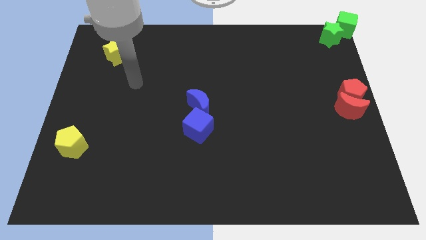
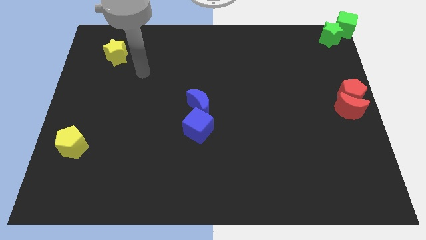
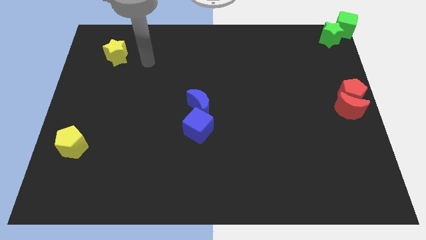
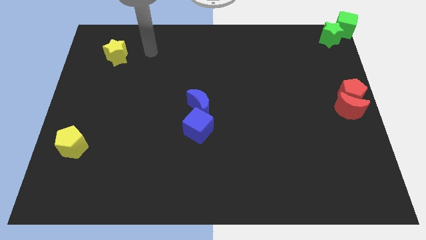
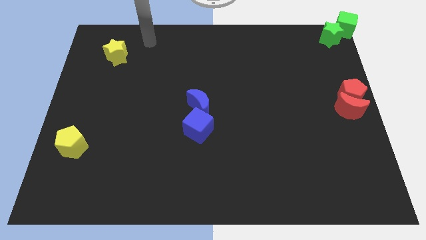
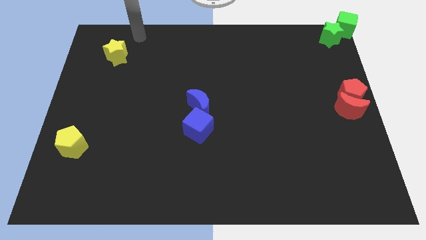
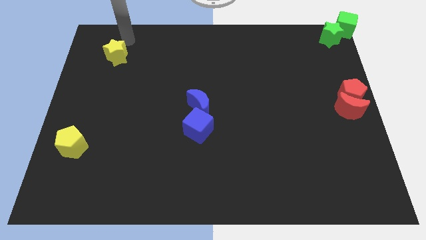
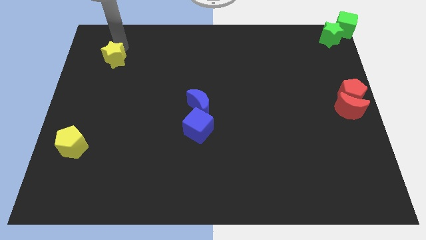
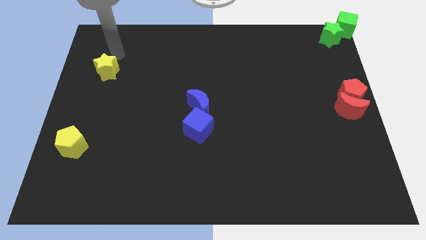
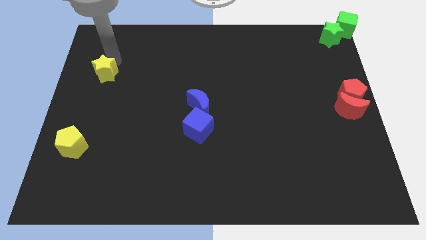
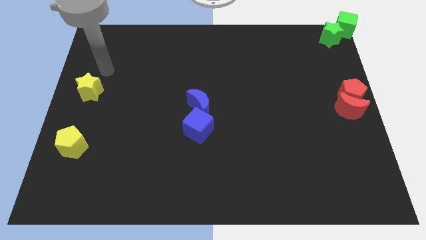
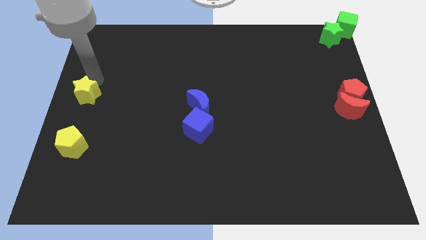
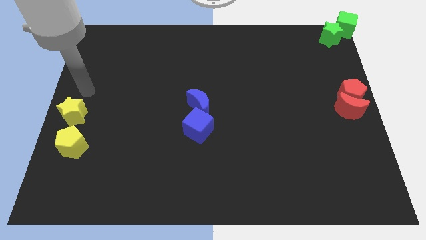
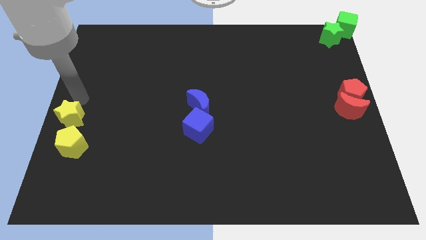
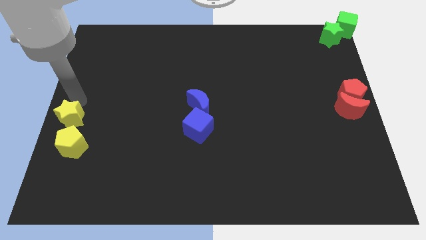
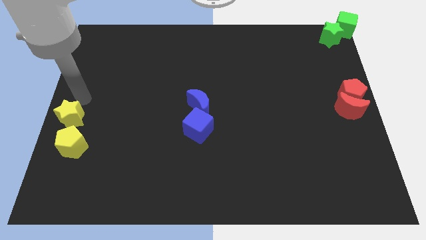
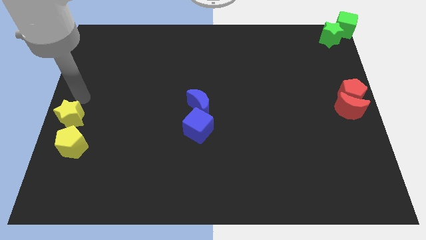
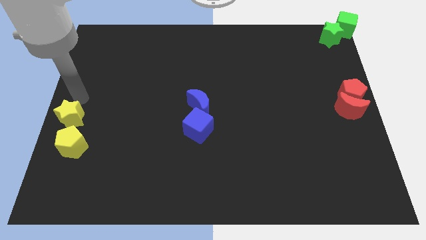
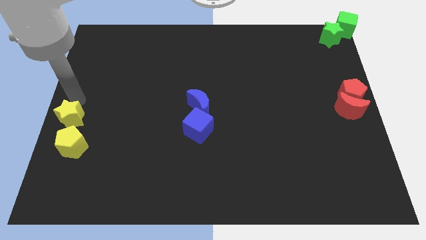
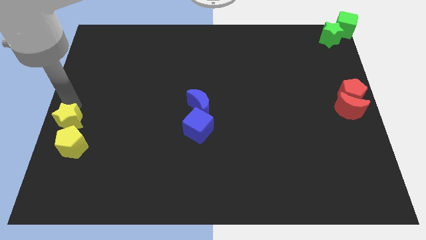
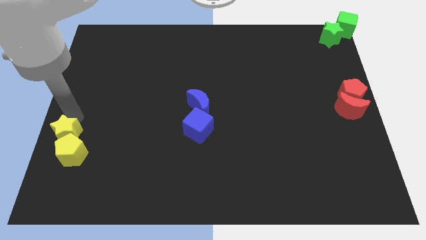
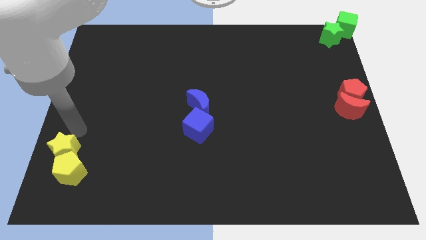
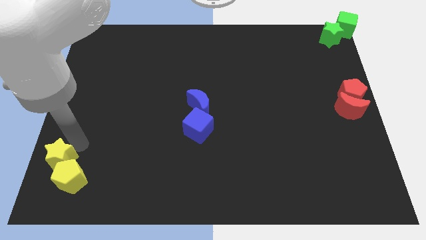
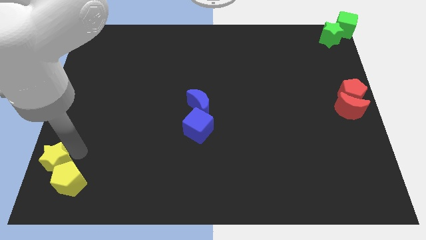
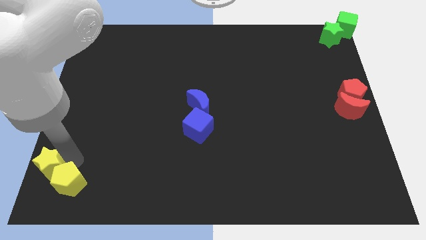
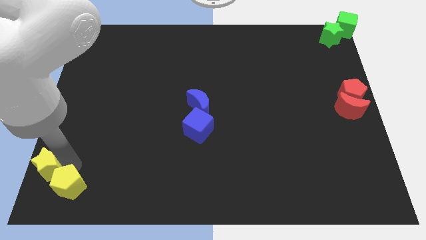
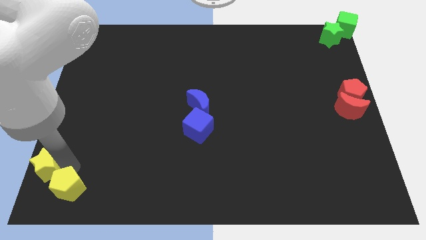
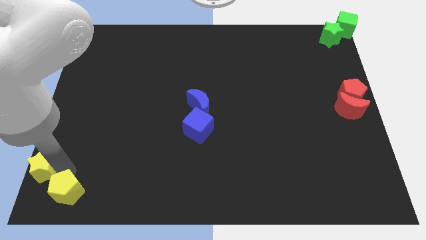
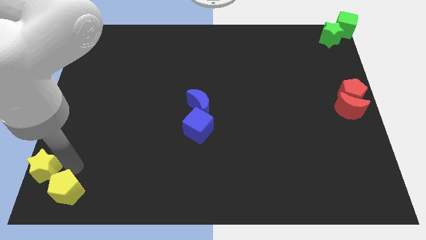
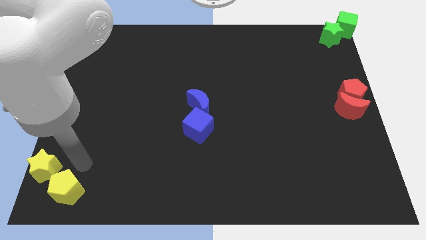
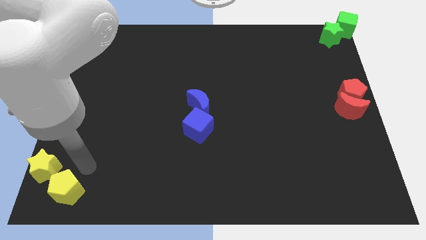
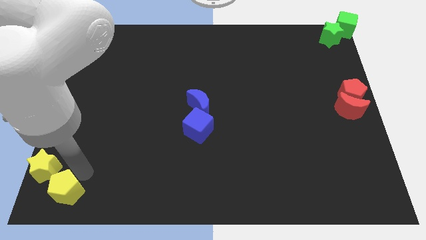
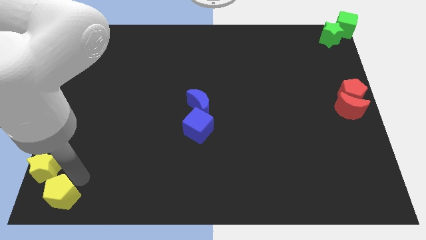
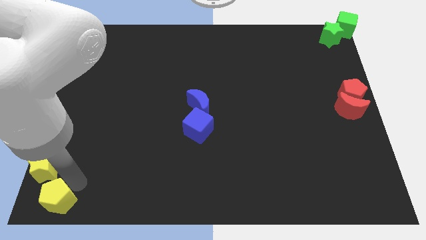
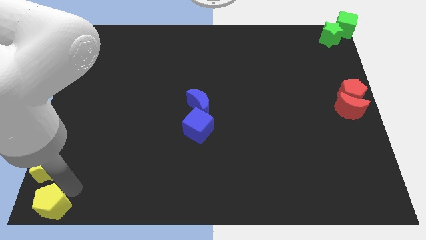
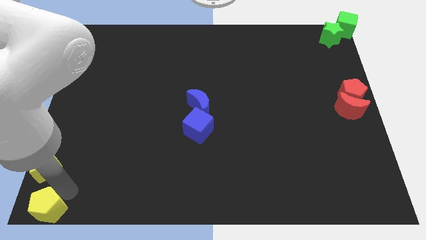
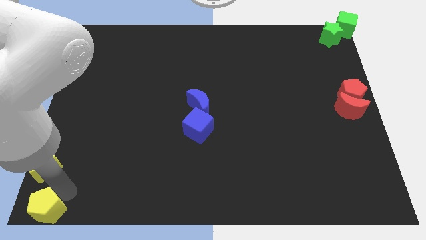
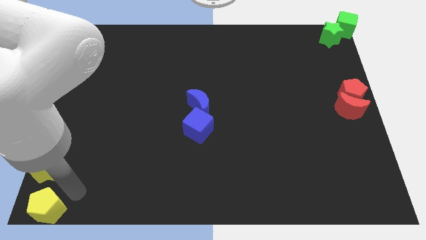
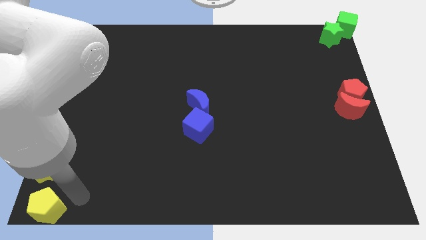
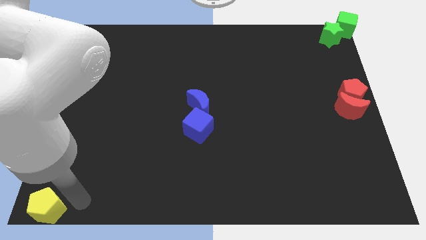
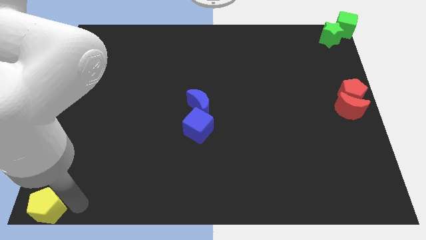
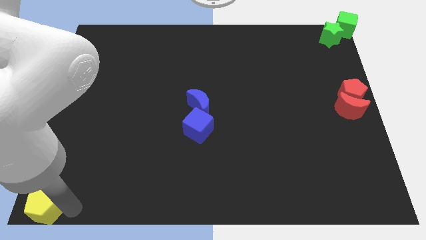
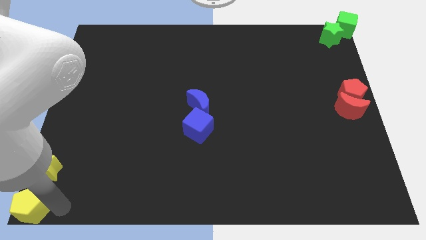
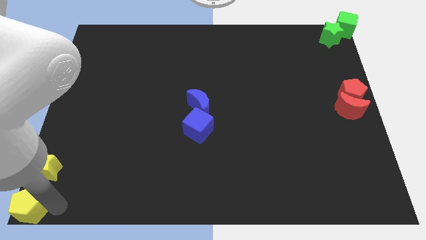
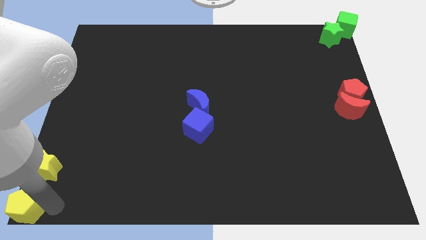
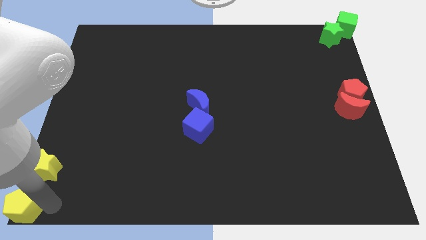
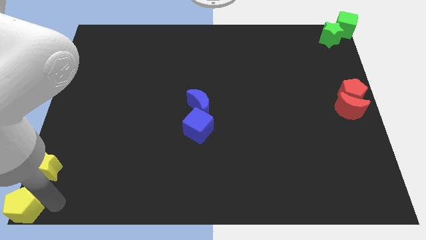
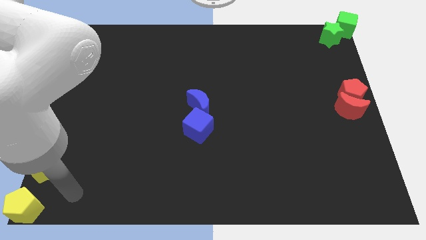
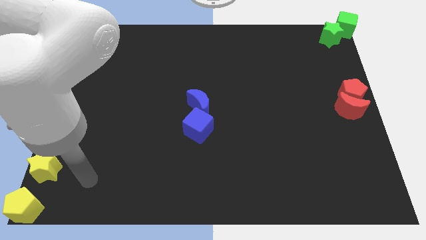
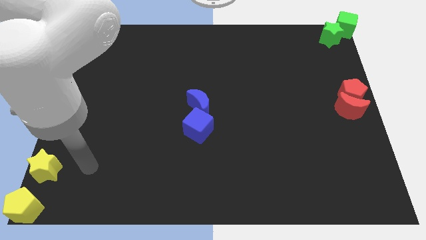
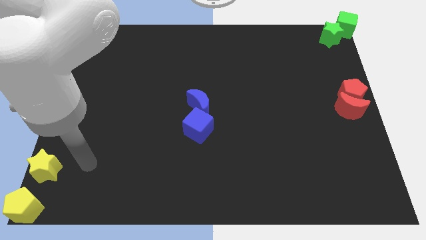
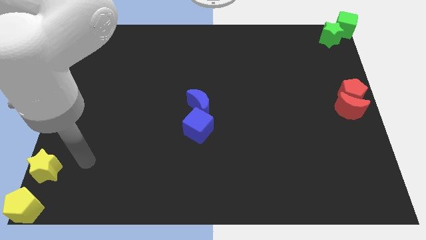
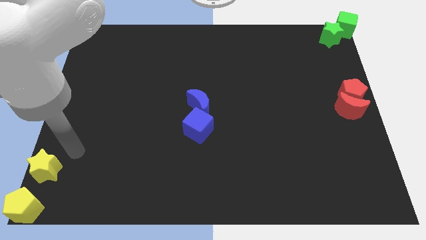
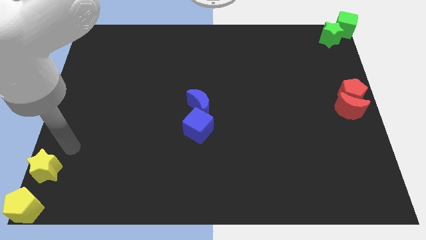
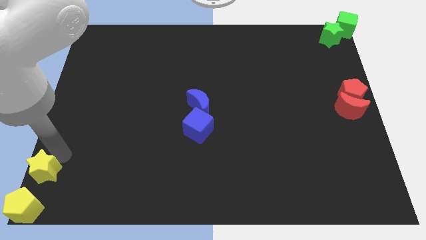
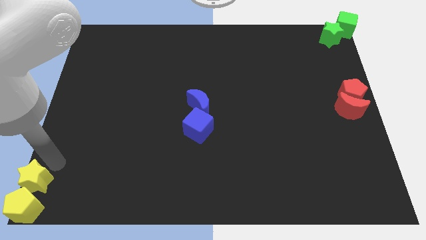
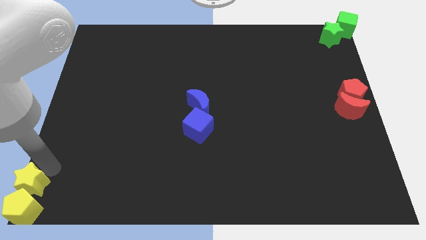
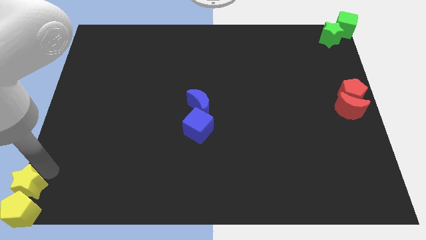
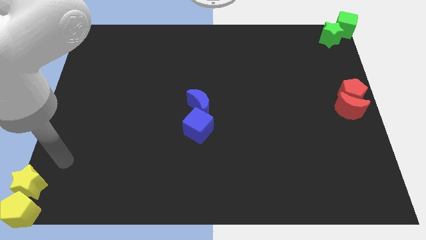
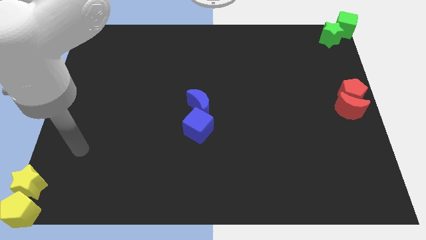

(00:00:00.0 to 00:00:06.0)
push yellow star and pentagon at the bottom left corner of the board

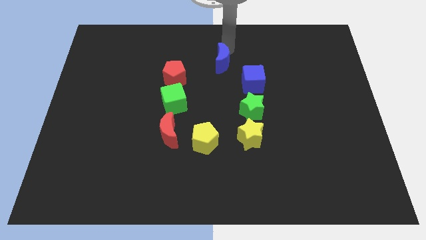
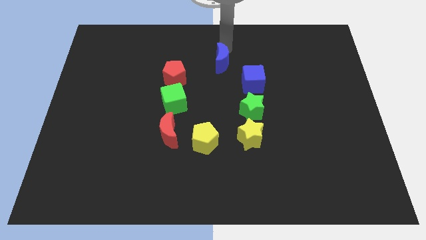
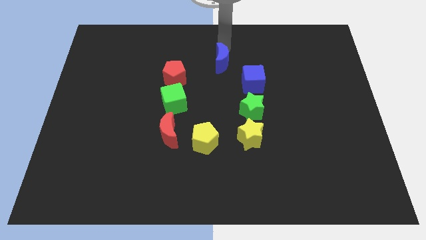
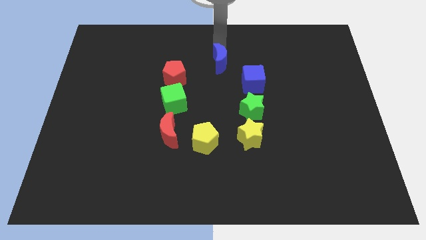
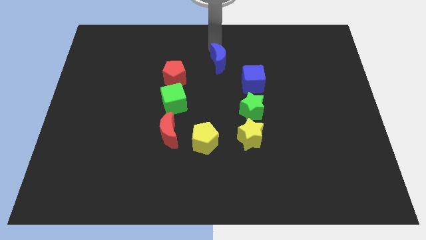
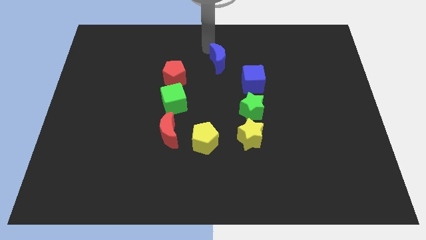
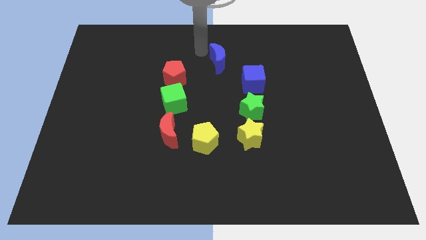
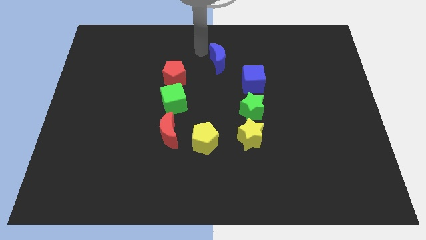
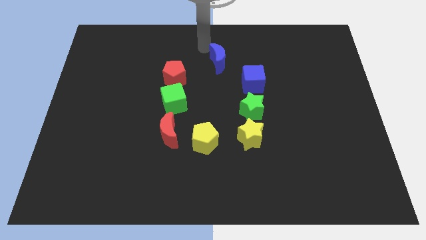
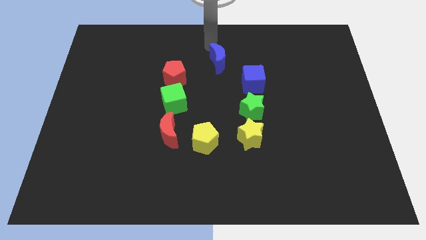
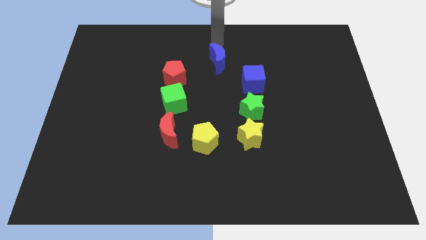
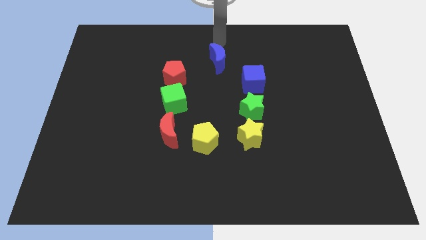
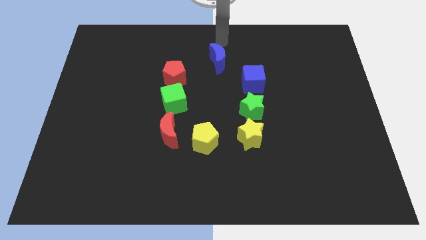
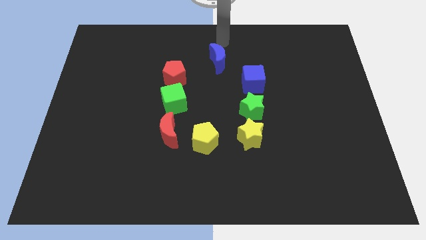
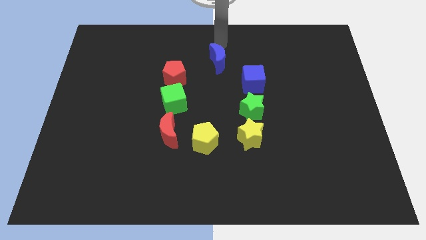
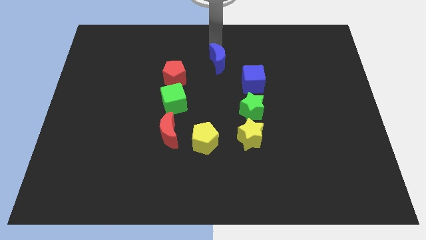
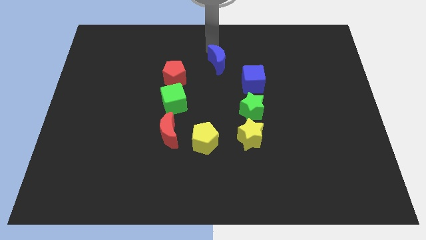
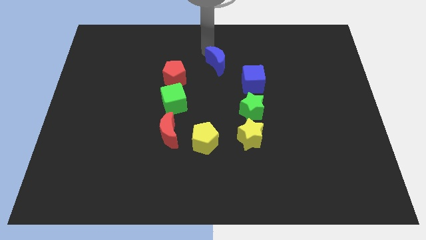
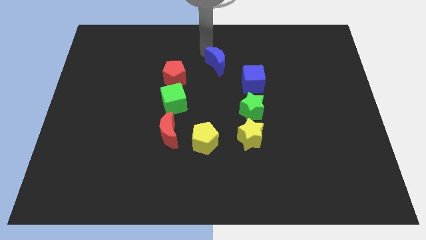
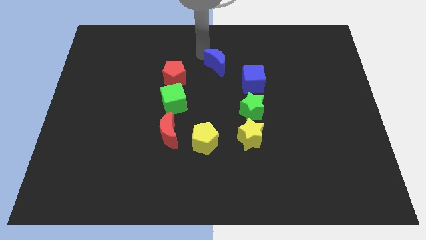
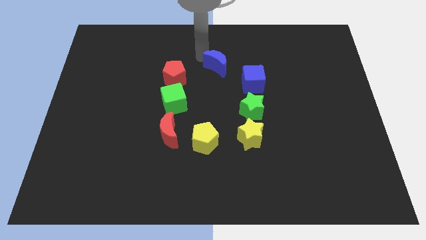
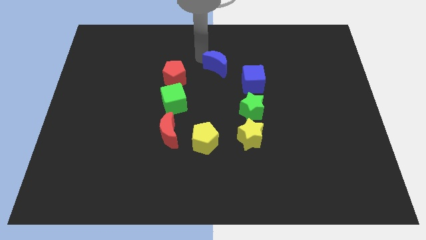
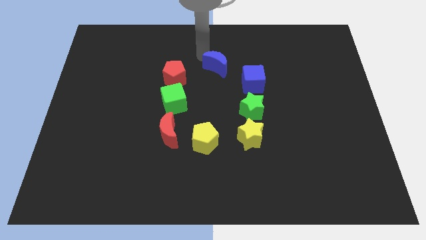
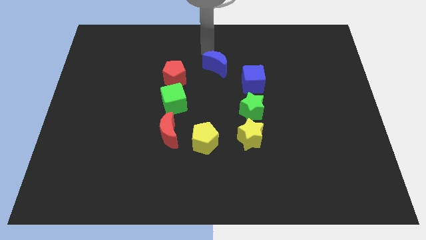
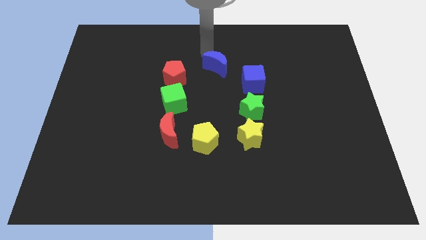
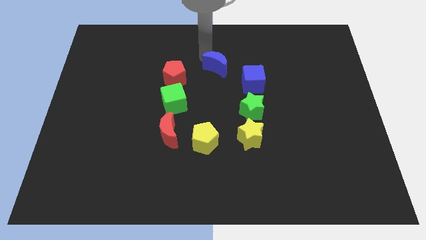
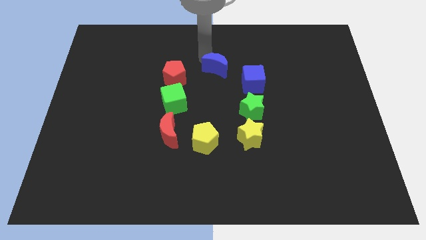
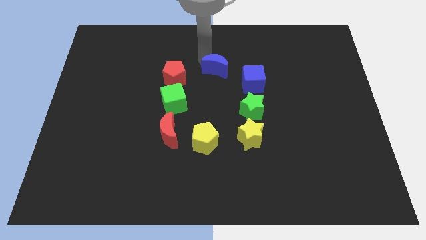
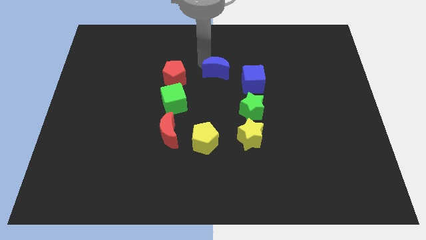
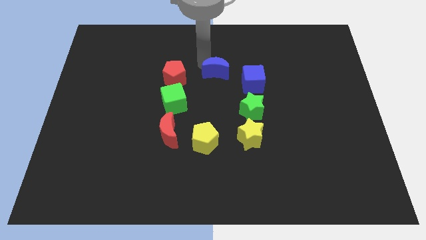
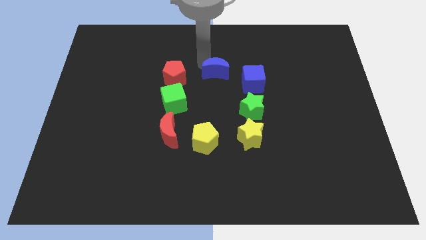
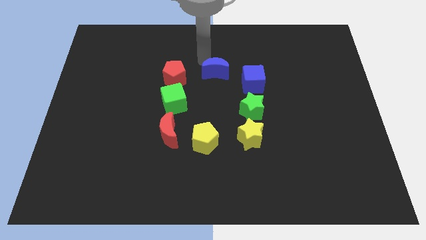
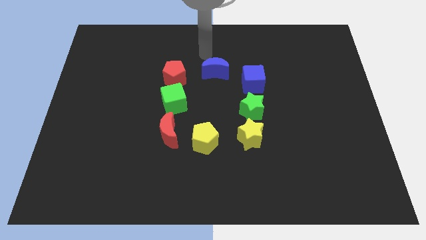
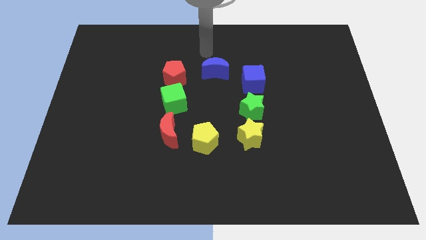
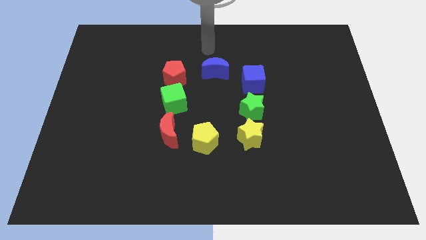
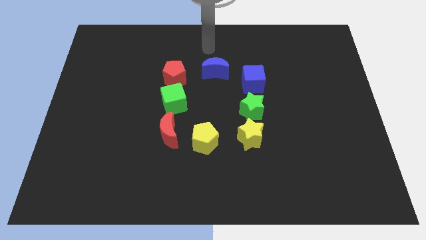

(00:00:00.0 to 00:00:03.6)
move the blue moon between the red pentagon and blue cube
